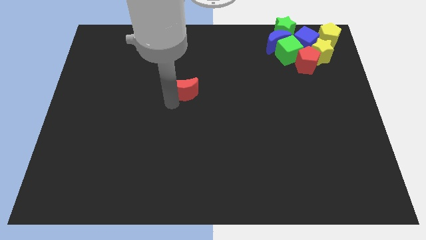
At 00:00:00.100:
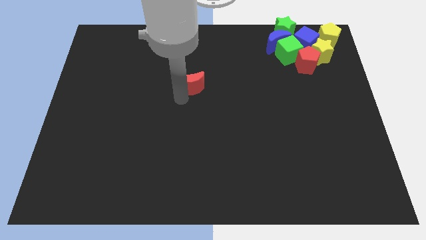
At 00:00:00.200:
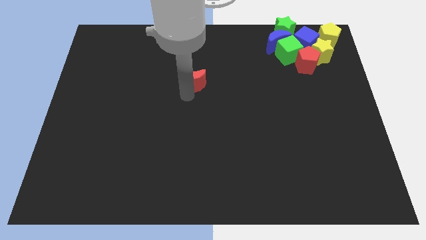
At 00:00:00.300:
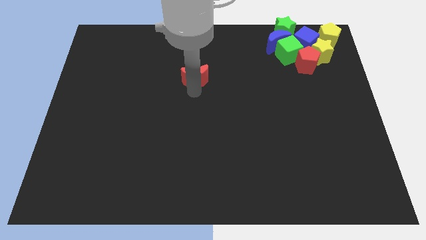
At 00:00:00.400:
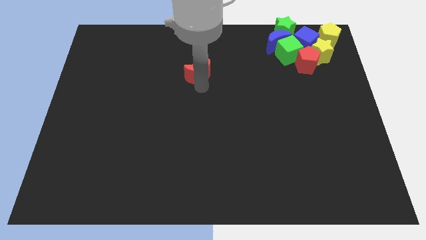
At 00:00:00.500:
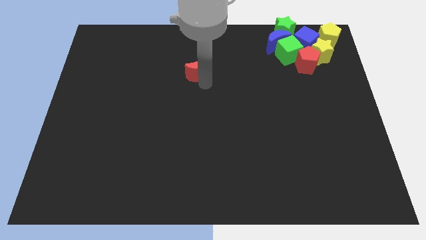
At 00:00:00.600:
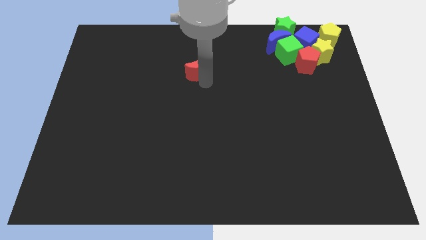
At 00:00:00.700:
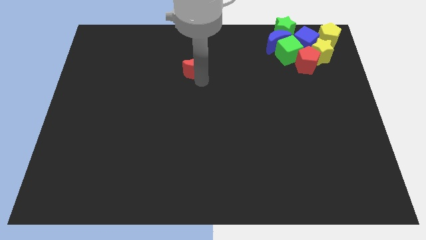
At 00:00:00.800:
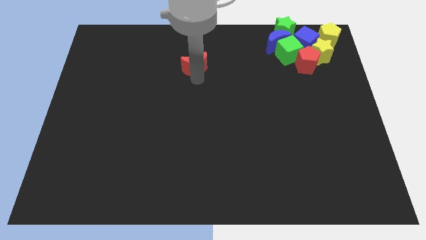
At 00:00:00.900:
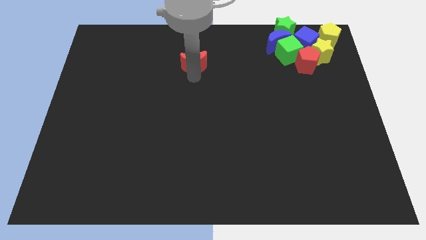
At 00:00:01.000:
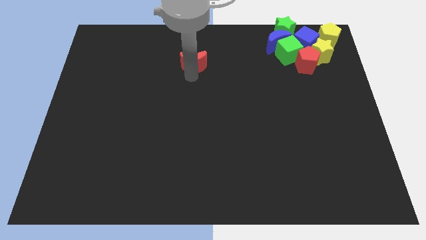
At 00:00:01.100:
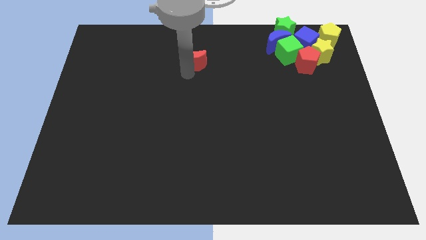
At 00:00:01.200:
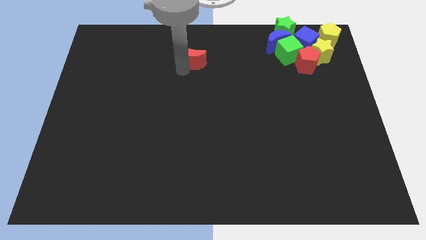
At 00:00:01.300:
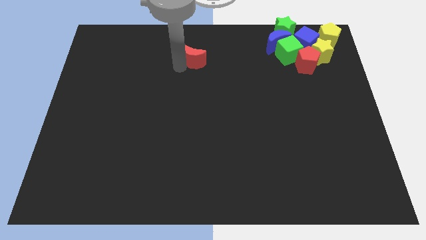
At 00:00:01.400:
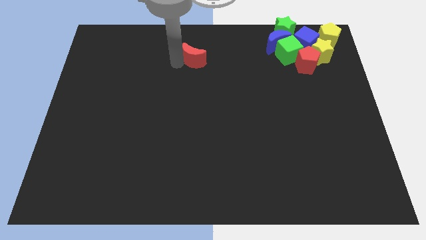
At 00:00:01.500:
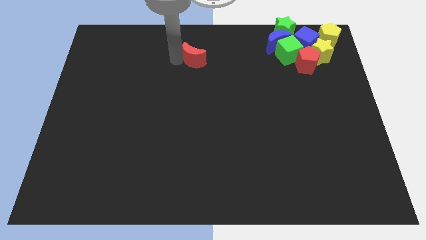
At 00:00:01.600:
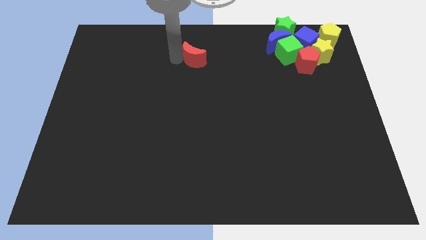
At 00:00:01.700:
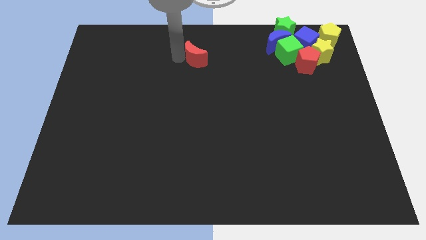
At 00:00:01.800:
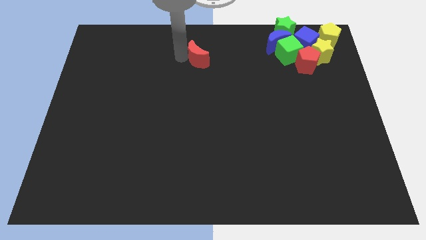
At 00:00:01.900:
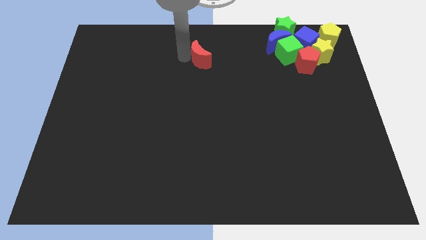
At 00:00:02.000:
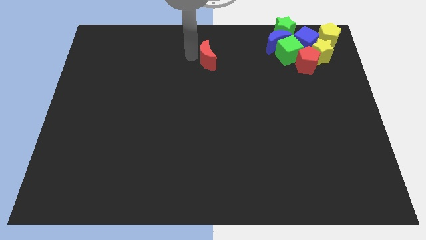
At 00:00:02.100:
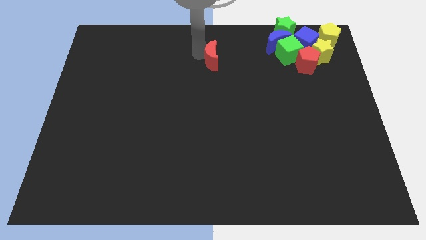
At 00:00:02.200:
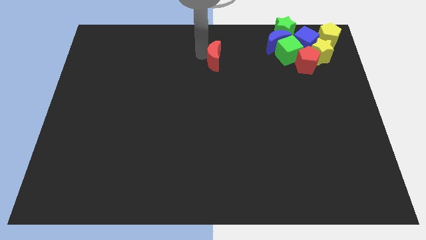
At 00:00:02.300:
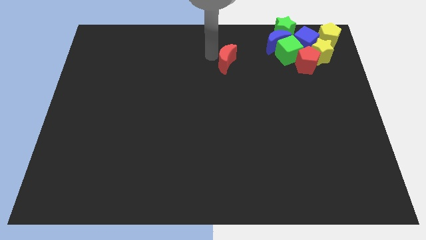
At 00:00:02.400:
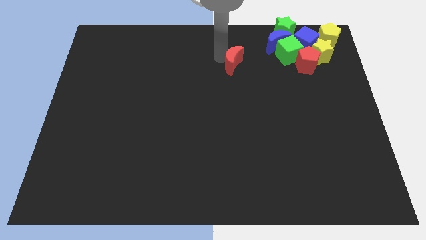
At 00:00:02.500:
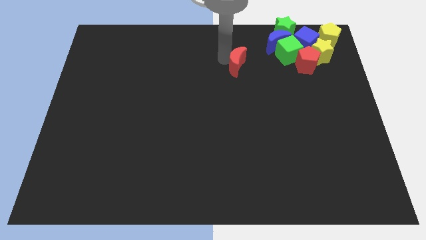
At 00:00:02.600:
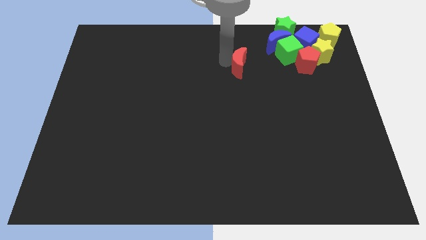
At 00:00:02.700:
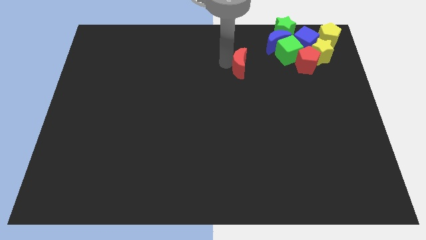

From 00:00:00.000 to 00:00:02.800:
turn red crescent to the top center

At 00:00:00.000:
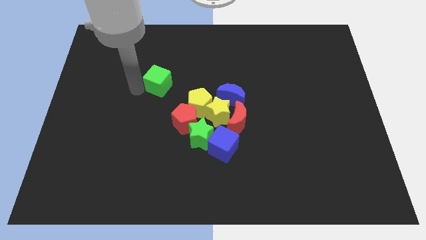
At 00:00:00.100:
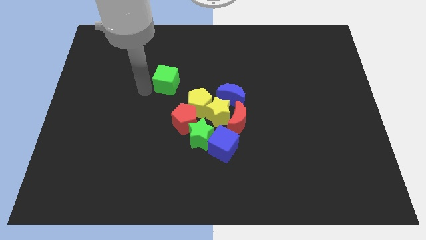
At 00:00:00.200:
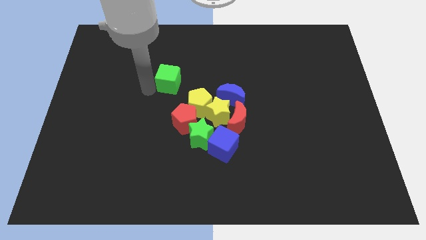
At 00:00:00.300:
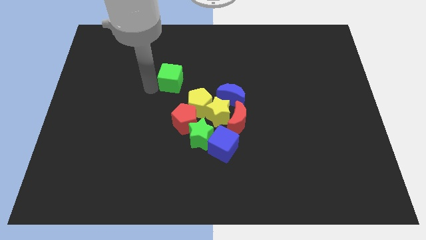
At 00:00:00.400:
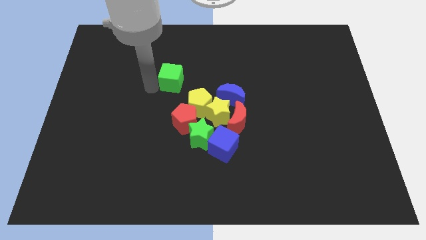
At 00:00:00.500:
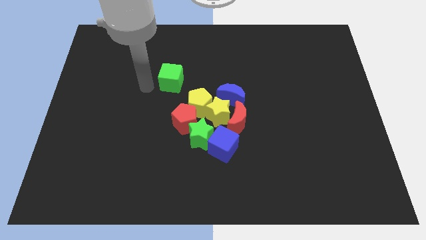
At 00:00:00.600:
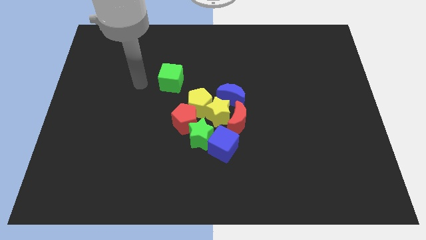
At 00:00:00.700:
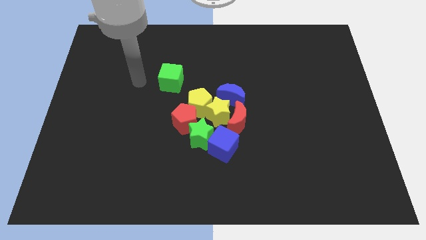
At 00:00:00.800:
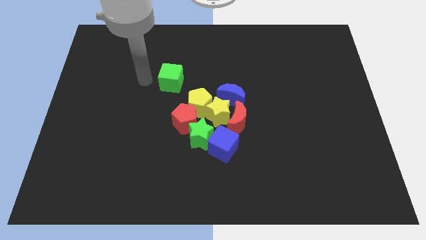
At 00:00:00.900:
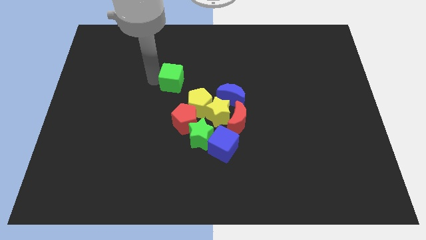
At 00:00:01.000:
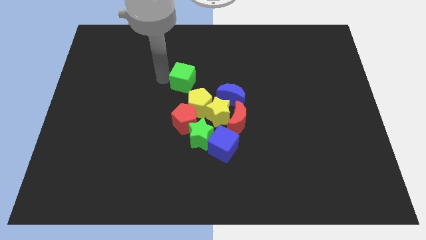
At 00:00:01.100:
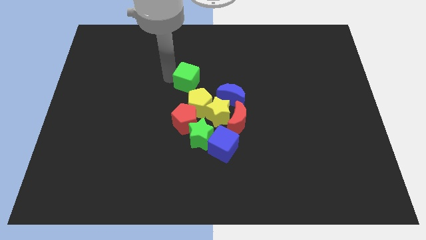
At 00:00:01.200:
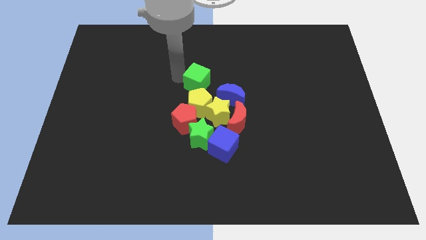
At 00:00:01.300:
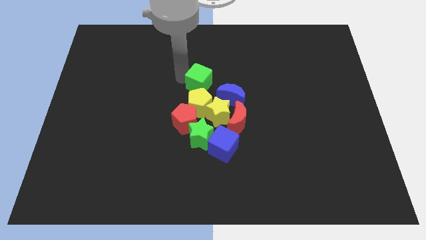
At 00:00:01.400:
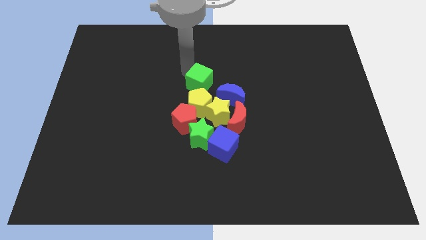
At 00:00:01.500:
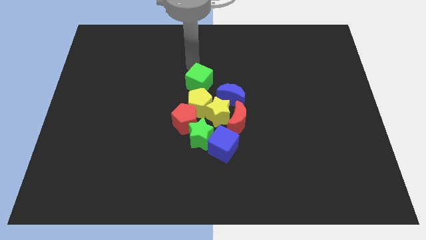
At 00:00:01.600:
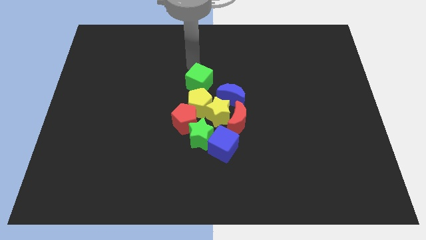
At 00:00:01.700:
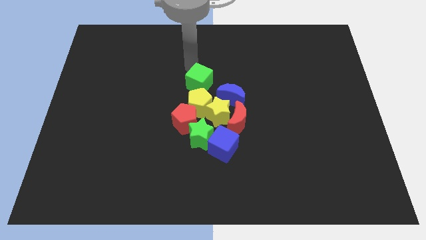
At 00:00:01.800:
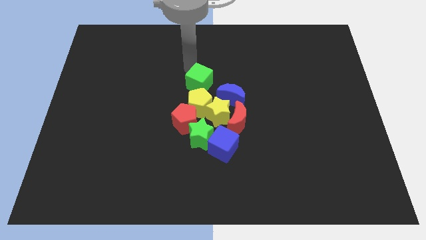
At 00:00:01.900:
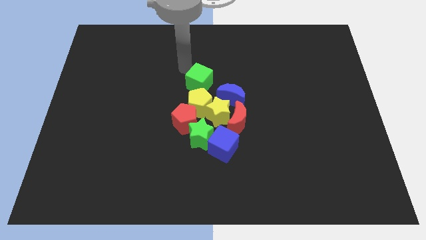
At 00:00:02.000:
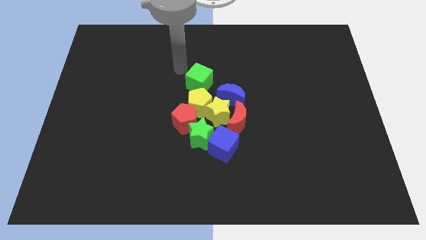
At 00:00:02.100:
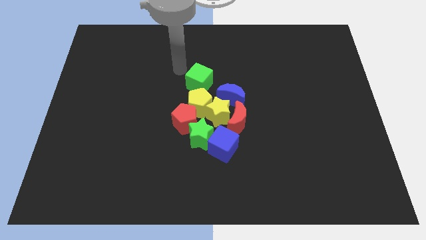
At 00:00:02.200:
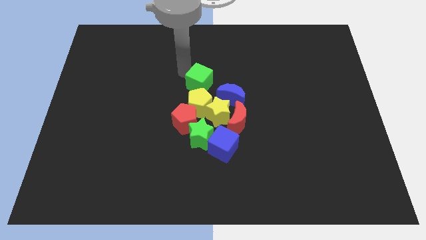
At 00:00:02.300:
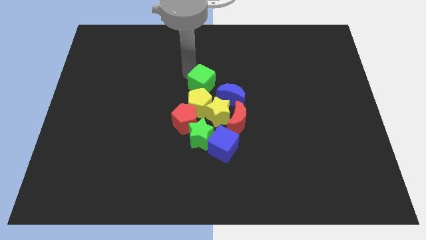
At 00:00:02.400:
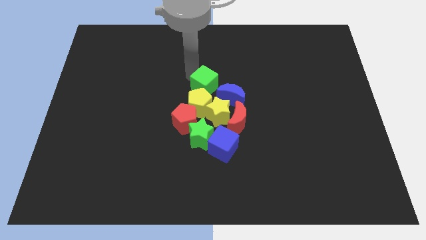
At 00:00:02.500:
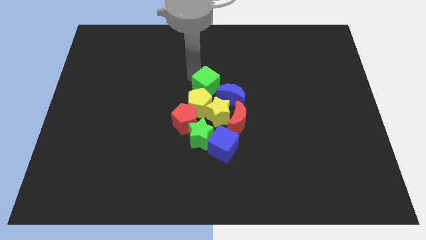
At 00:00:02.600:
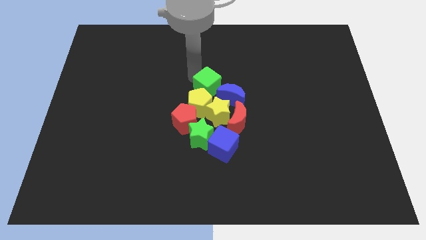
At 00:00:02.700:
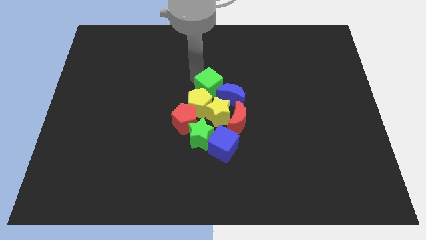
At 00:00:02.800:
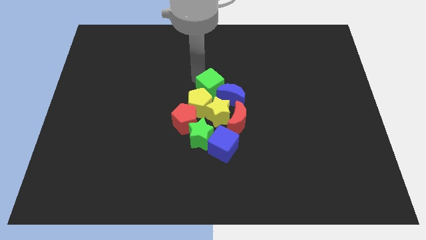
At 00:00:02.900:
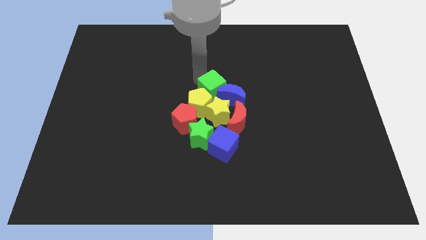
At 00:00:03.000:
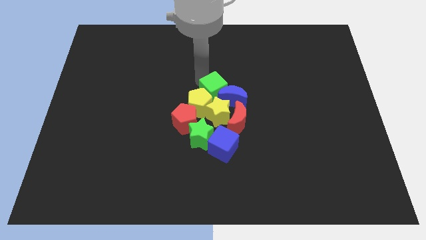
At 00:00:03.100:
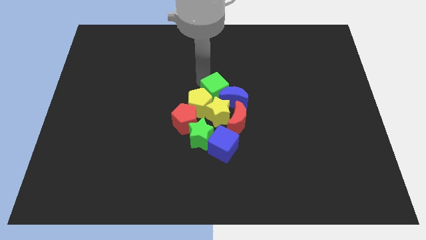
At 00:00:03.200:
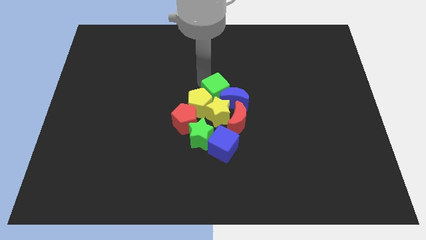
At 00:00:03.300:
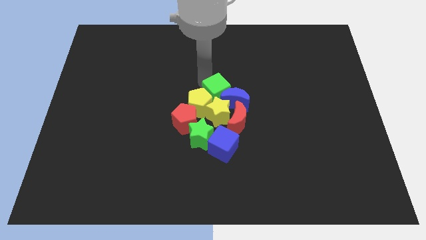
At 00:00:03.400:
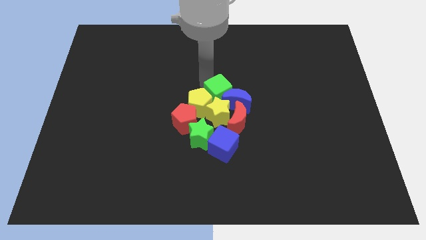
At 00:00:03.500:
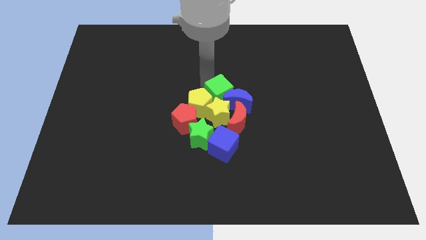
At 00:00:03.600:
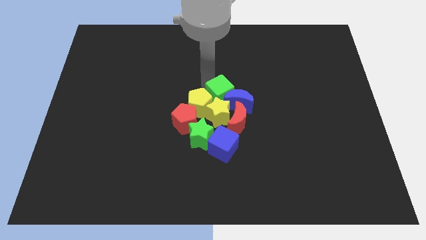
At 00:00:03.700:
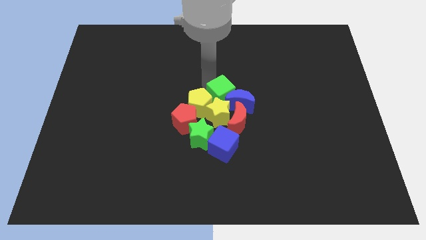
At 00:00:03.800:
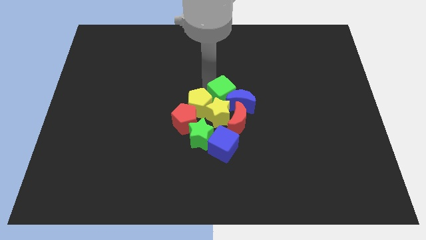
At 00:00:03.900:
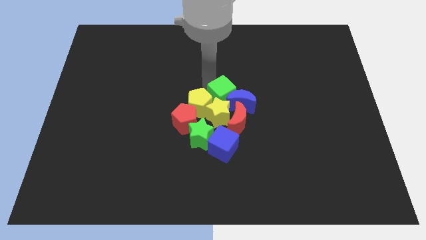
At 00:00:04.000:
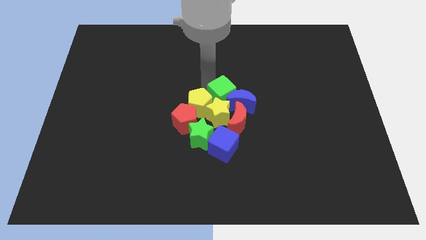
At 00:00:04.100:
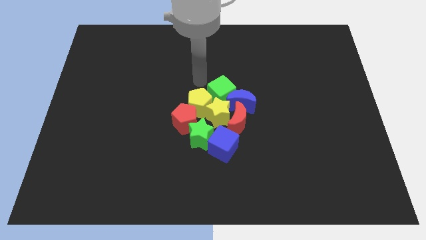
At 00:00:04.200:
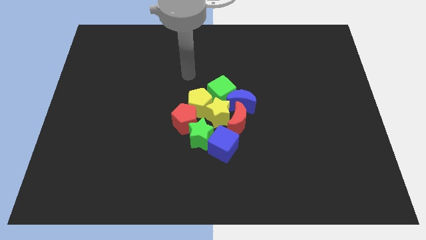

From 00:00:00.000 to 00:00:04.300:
move the green cube into the group of all the blocks at the center of the board

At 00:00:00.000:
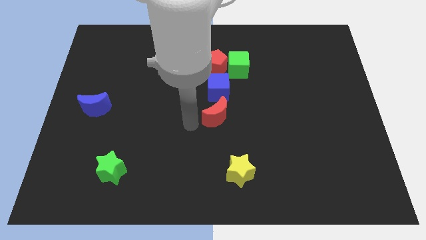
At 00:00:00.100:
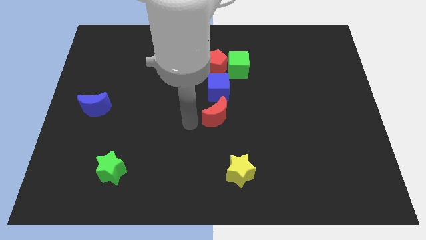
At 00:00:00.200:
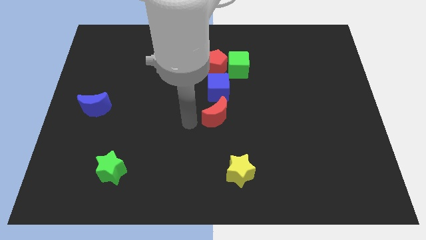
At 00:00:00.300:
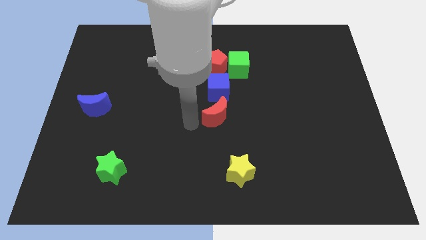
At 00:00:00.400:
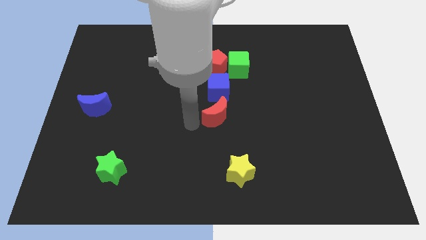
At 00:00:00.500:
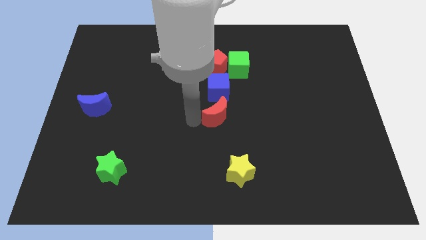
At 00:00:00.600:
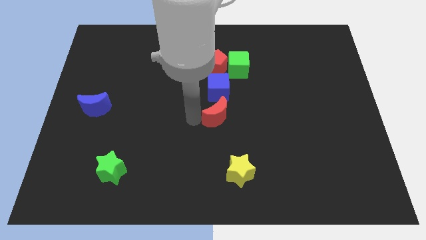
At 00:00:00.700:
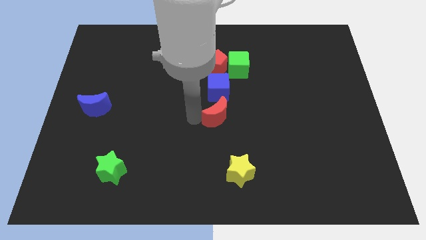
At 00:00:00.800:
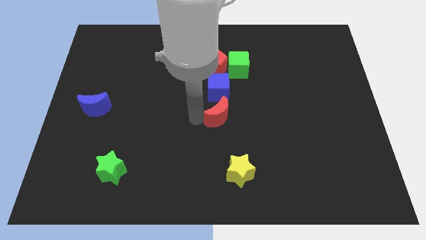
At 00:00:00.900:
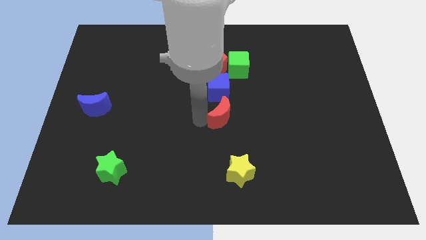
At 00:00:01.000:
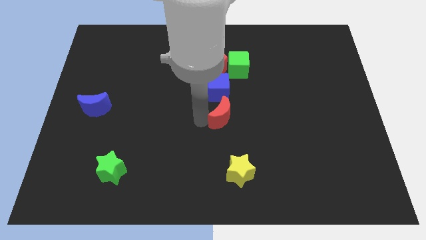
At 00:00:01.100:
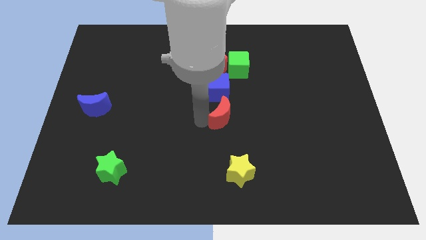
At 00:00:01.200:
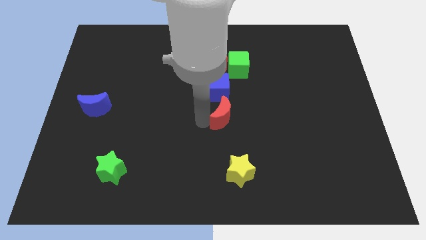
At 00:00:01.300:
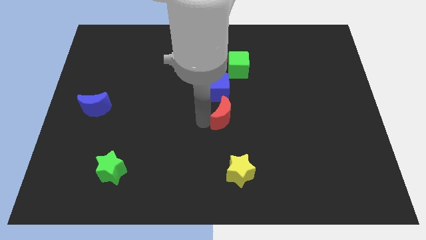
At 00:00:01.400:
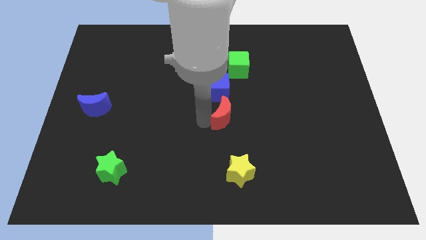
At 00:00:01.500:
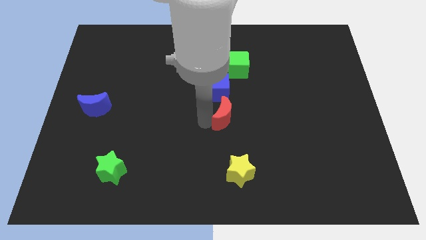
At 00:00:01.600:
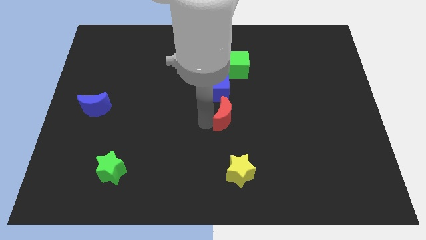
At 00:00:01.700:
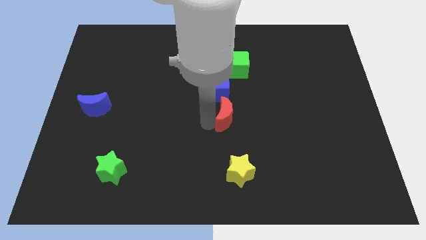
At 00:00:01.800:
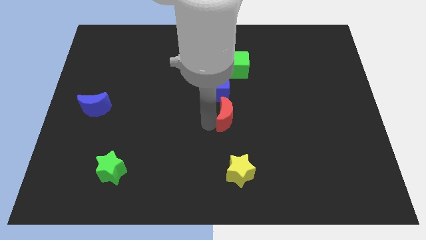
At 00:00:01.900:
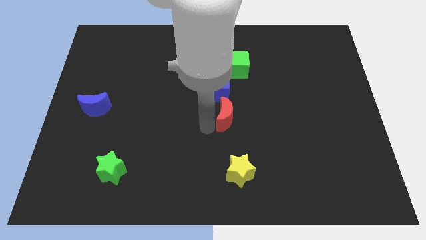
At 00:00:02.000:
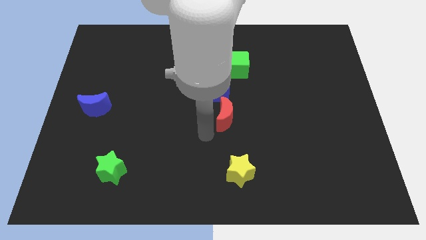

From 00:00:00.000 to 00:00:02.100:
place the red crescent diagonally in between the blue cube and yellow star
